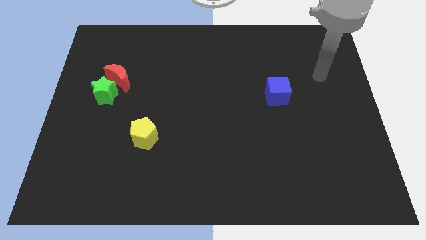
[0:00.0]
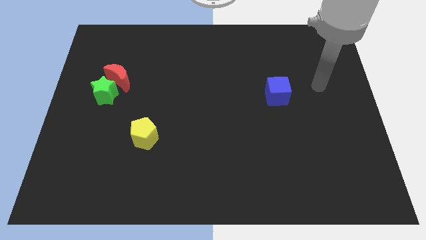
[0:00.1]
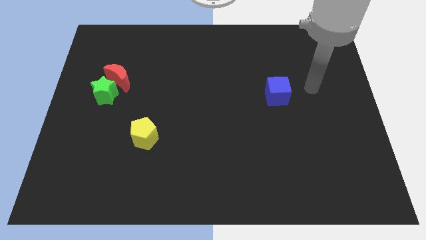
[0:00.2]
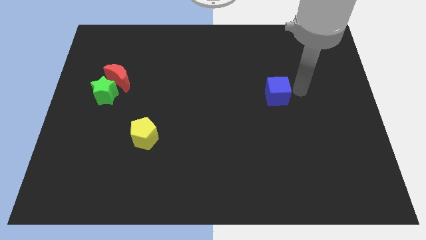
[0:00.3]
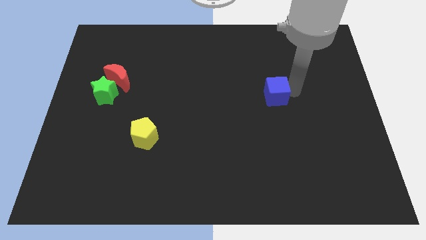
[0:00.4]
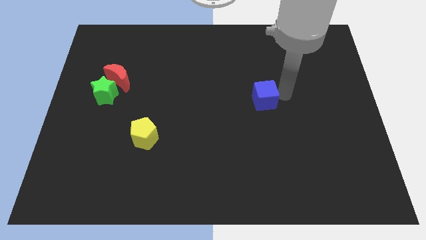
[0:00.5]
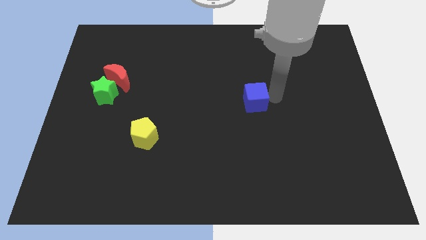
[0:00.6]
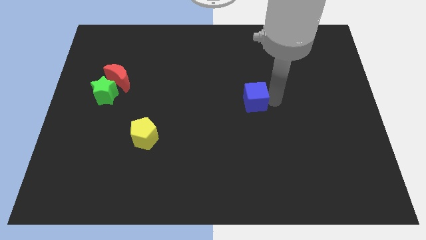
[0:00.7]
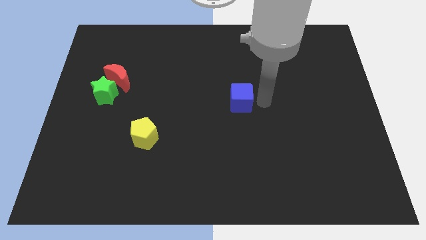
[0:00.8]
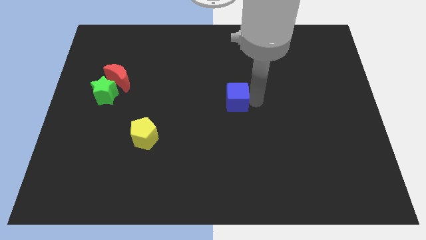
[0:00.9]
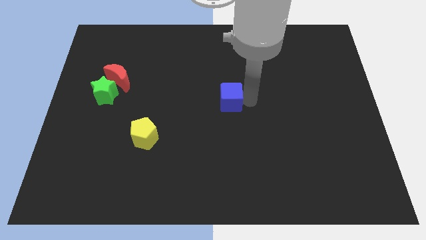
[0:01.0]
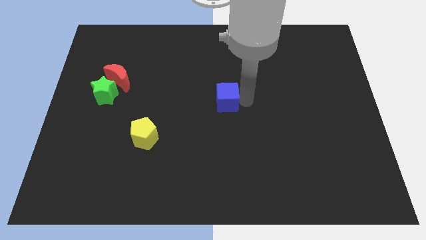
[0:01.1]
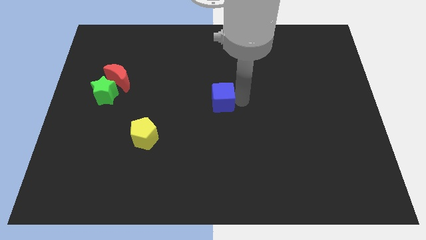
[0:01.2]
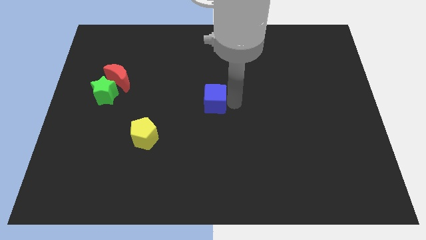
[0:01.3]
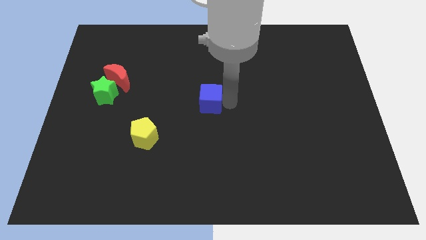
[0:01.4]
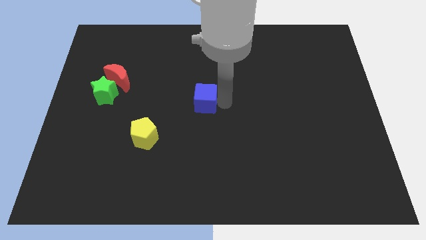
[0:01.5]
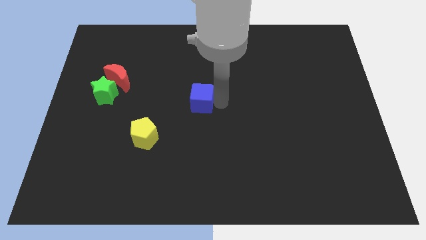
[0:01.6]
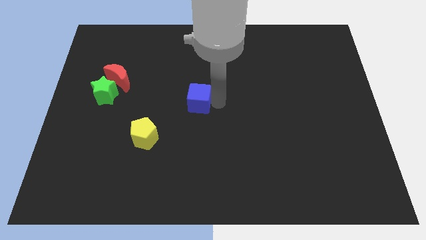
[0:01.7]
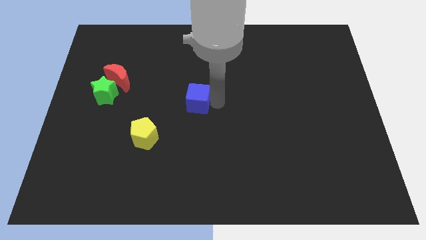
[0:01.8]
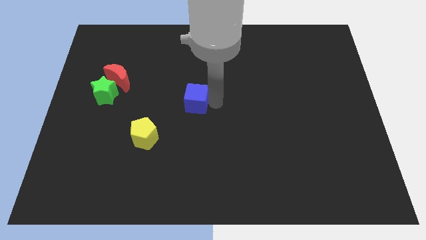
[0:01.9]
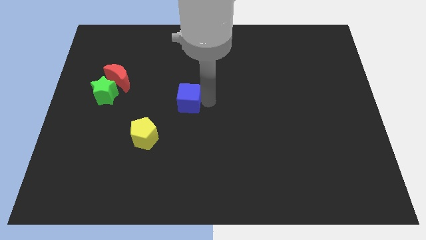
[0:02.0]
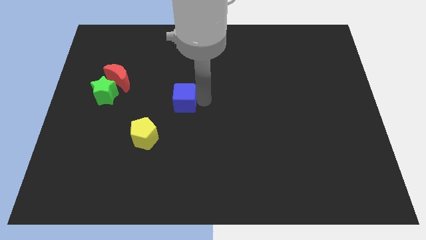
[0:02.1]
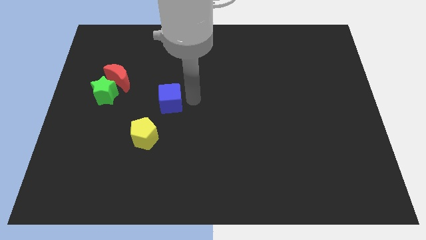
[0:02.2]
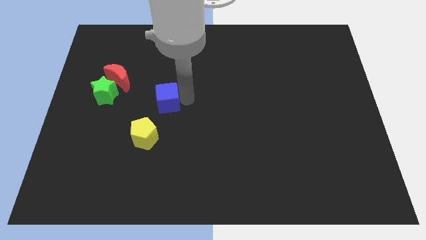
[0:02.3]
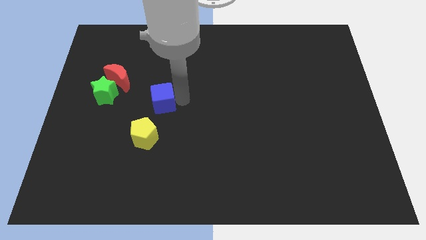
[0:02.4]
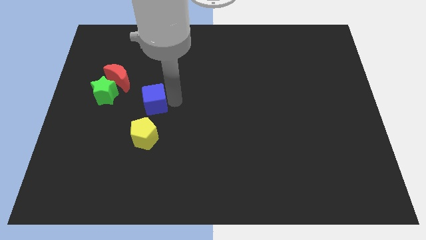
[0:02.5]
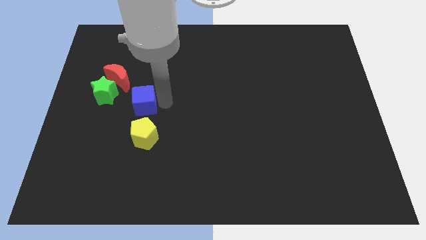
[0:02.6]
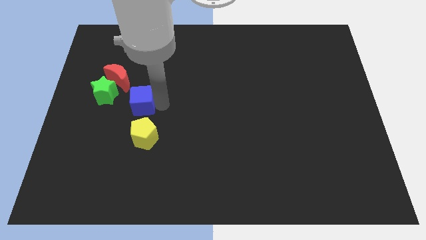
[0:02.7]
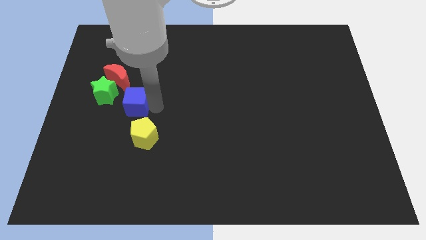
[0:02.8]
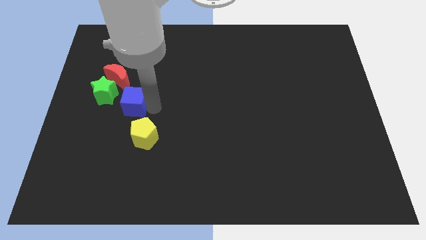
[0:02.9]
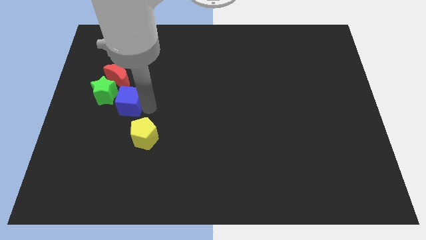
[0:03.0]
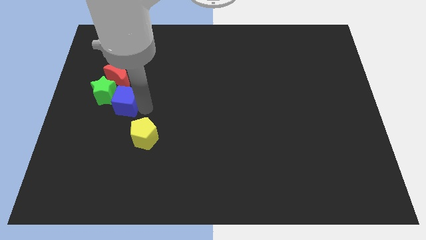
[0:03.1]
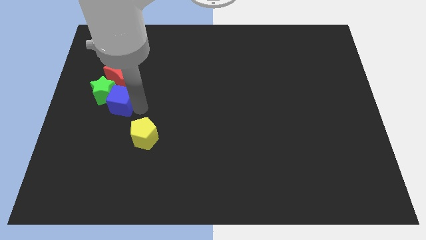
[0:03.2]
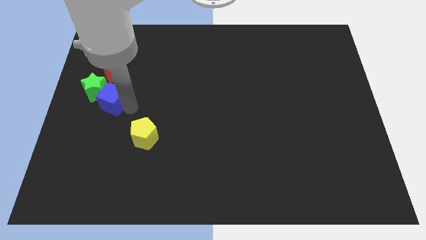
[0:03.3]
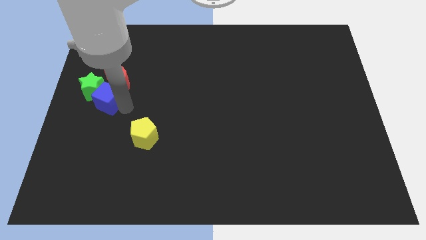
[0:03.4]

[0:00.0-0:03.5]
push the blue block next to the green block

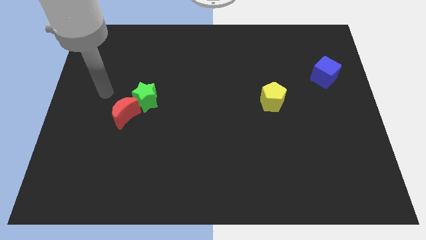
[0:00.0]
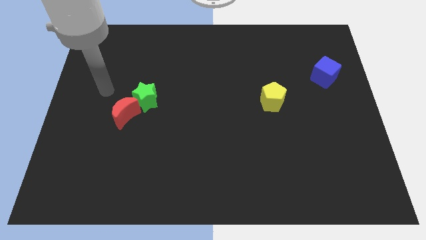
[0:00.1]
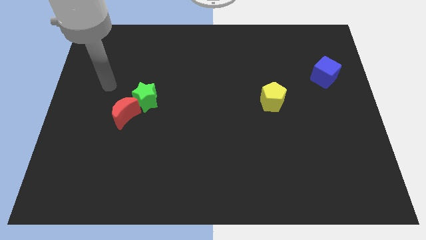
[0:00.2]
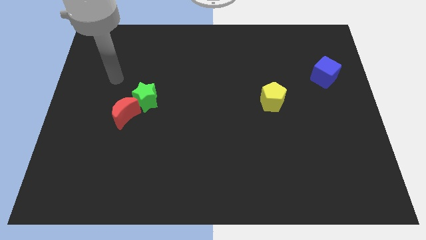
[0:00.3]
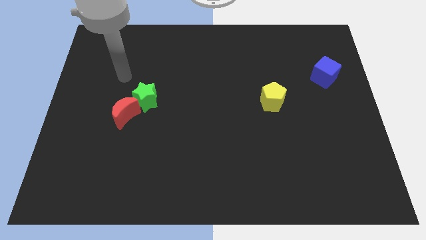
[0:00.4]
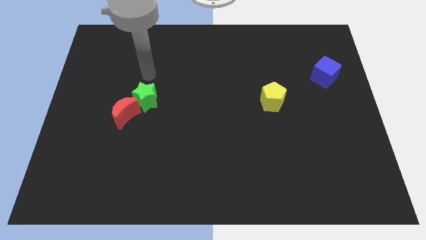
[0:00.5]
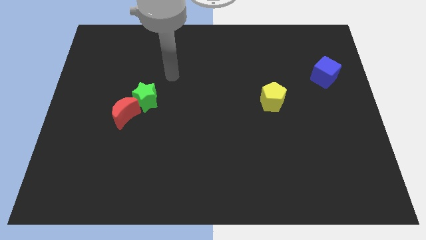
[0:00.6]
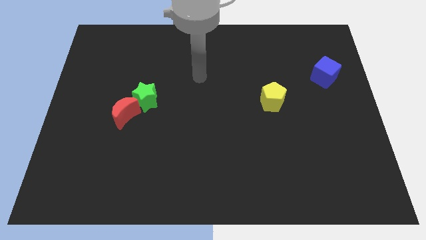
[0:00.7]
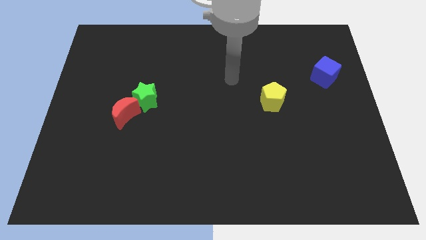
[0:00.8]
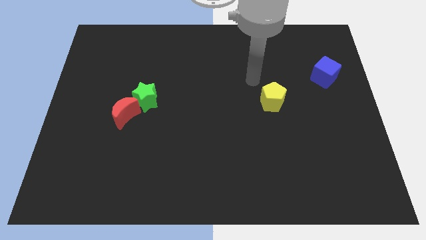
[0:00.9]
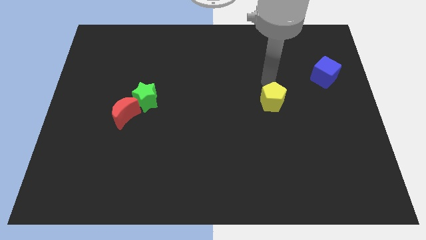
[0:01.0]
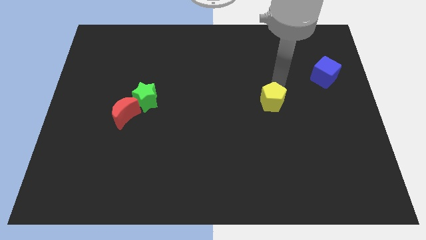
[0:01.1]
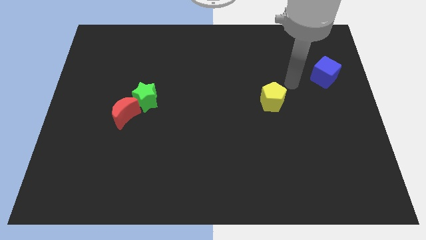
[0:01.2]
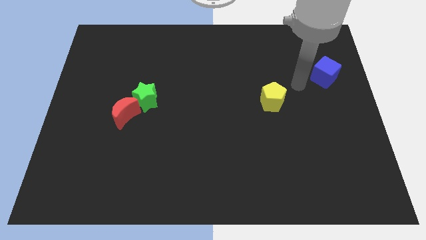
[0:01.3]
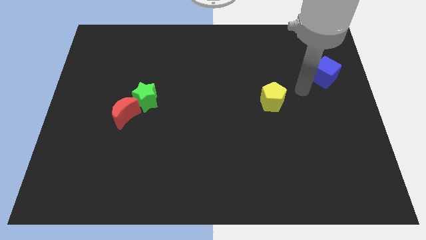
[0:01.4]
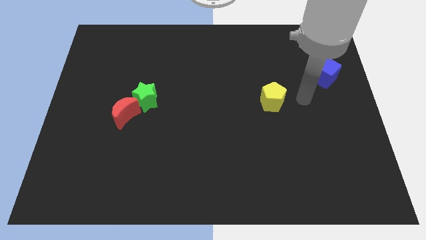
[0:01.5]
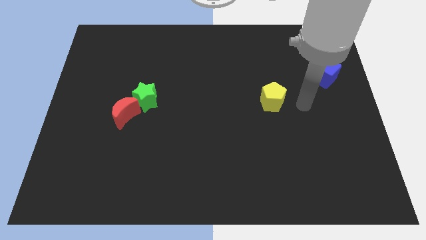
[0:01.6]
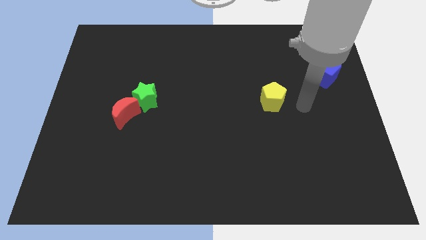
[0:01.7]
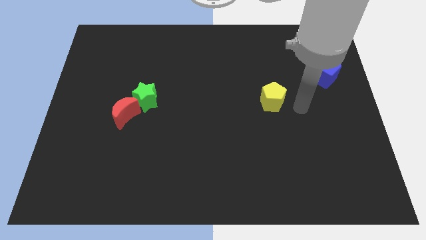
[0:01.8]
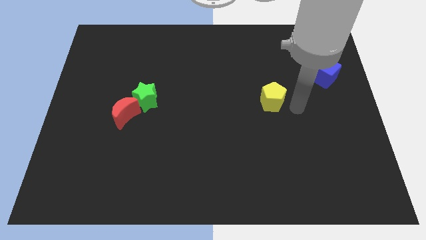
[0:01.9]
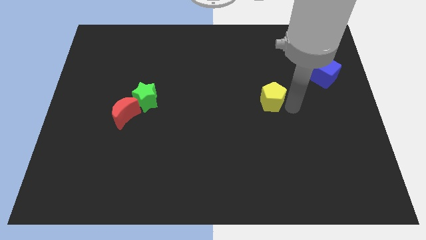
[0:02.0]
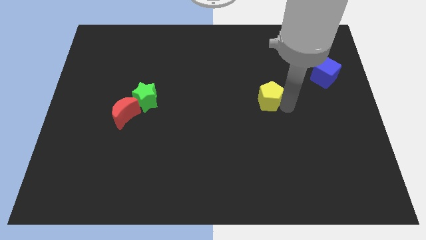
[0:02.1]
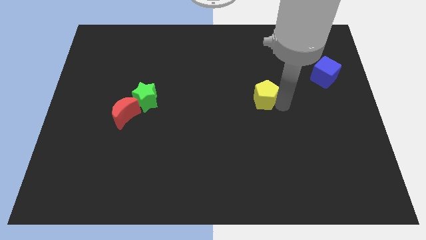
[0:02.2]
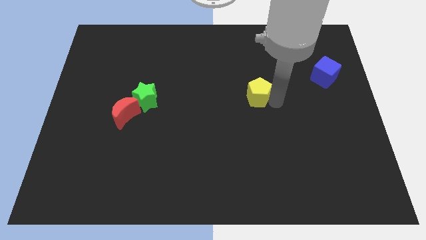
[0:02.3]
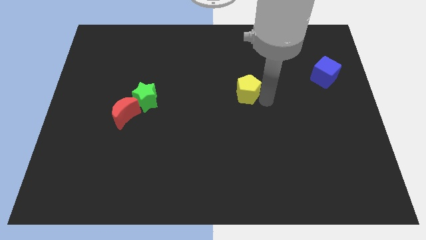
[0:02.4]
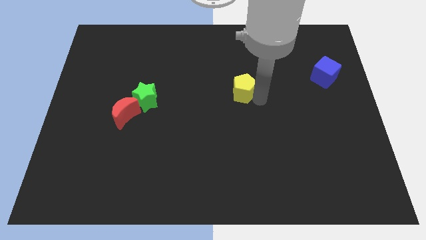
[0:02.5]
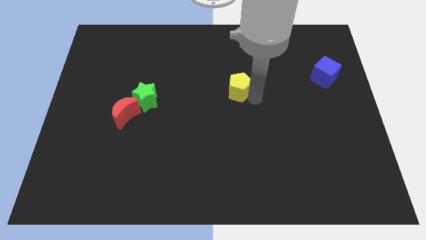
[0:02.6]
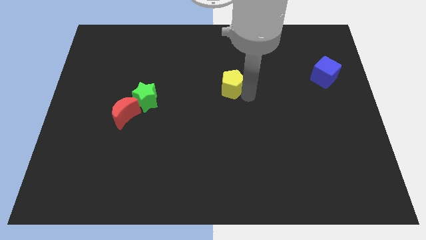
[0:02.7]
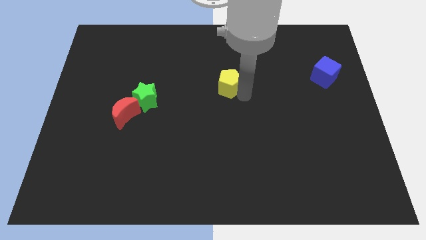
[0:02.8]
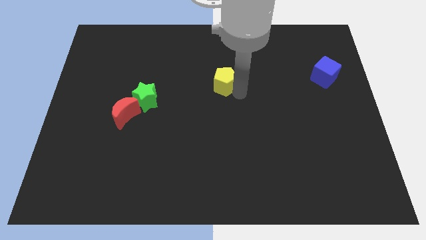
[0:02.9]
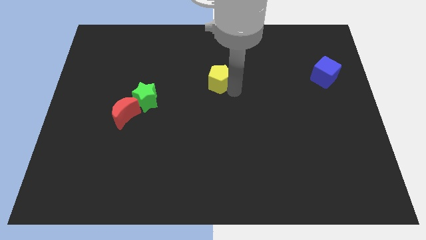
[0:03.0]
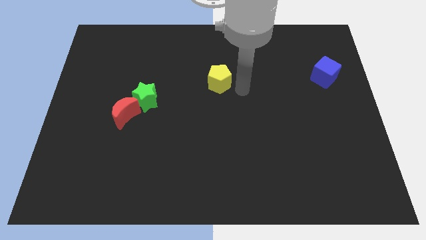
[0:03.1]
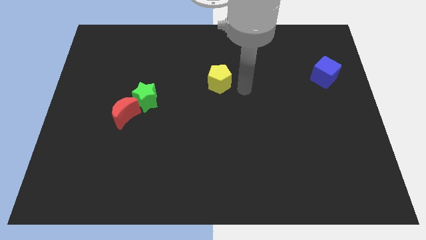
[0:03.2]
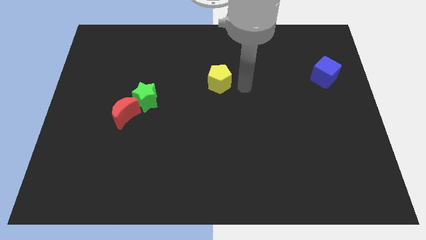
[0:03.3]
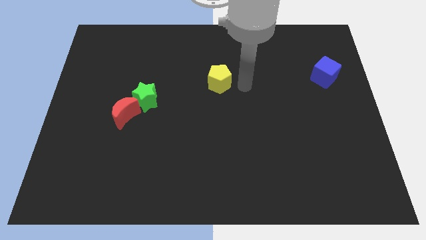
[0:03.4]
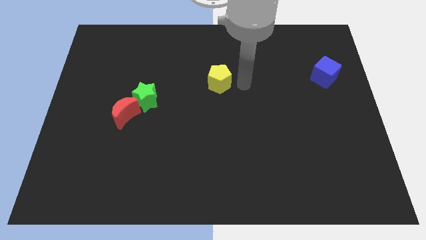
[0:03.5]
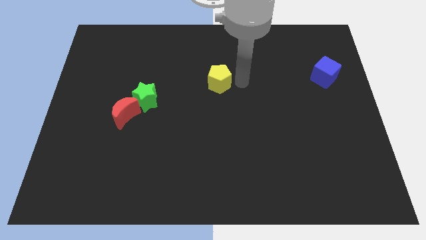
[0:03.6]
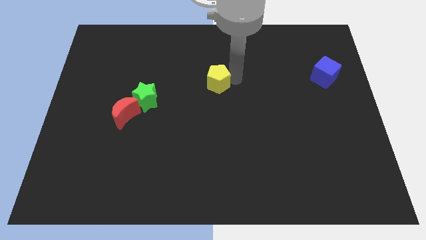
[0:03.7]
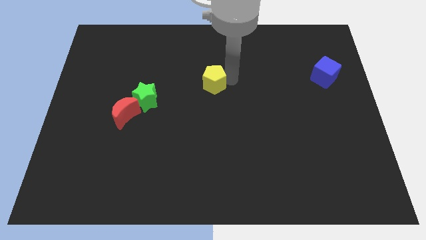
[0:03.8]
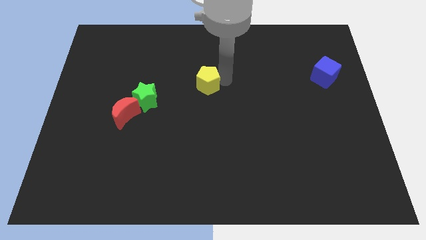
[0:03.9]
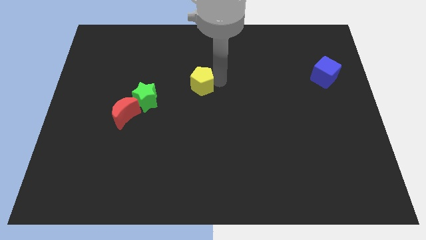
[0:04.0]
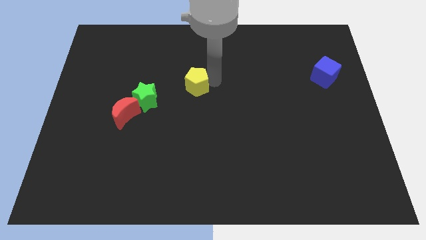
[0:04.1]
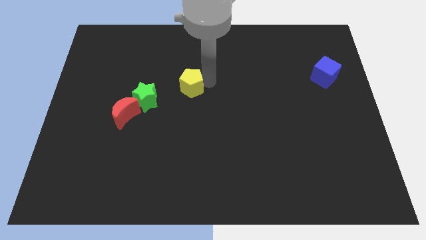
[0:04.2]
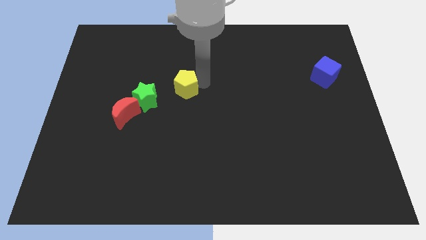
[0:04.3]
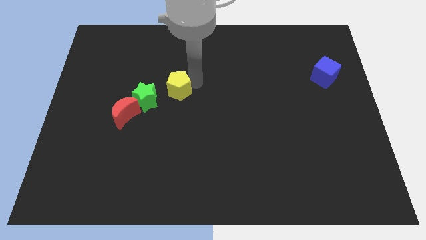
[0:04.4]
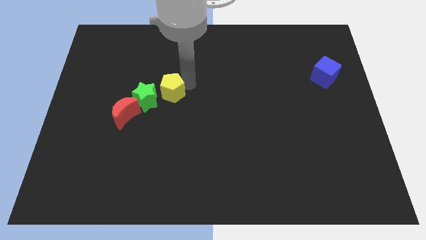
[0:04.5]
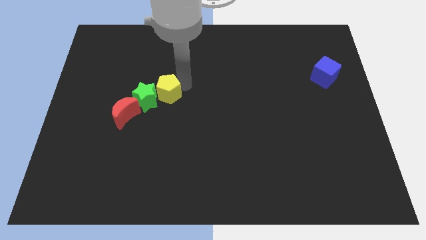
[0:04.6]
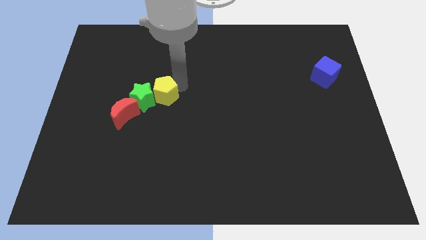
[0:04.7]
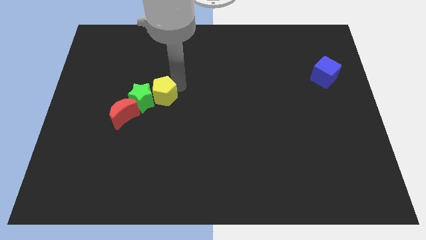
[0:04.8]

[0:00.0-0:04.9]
push the yellow pentagon towards the star

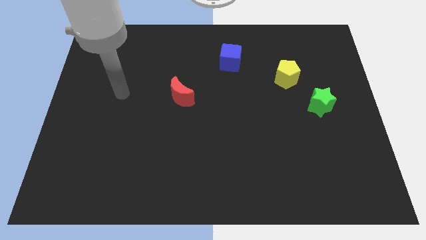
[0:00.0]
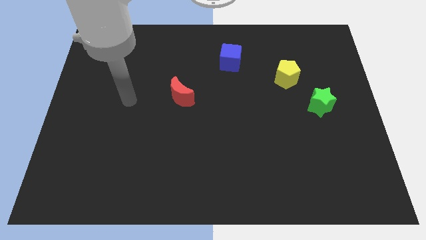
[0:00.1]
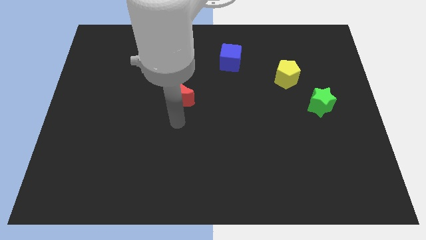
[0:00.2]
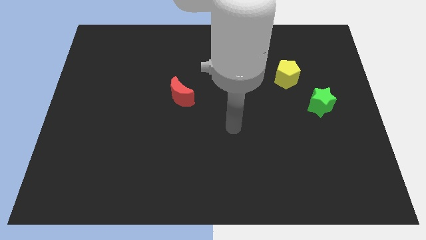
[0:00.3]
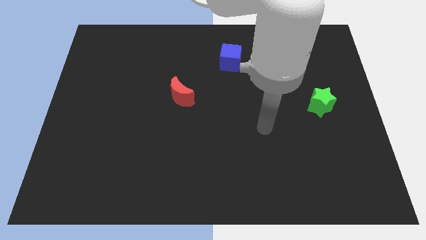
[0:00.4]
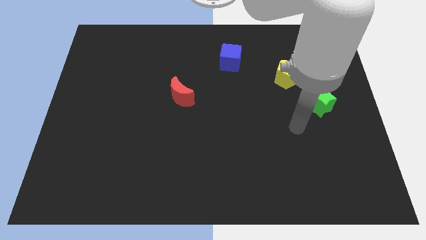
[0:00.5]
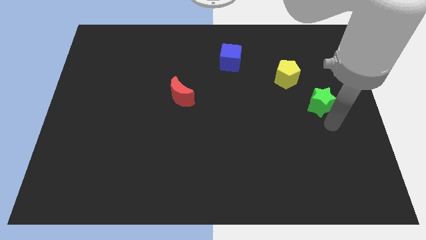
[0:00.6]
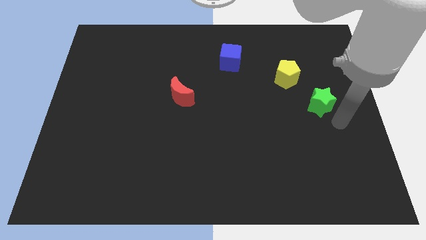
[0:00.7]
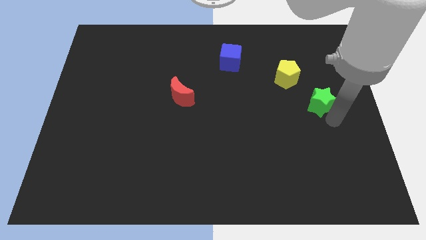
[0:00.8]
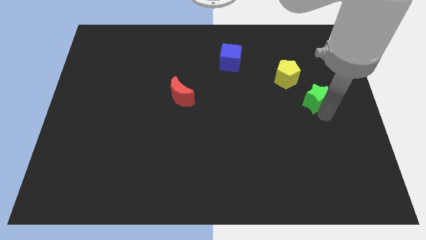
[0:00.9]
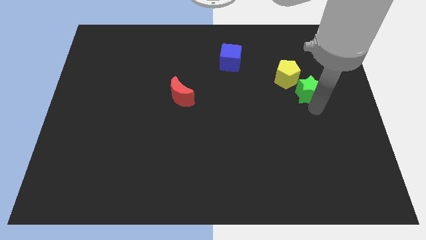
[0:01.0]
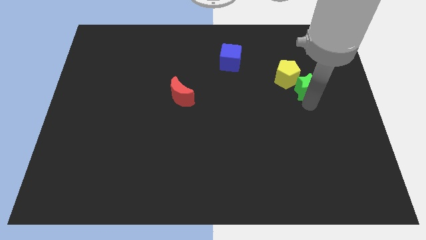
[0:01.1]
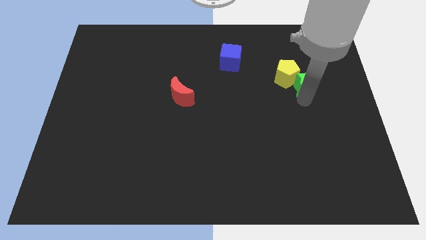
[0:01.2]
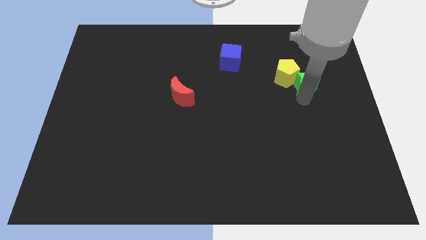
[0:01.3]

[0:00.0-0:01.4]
move the green star next to the yellow pentagon
